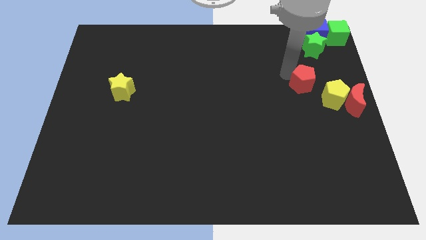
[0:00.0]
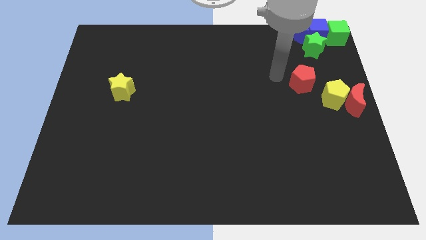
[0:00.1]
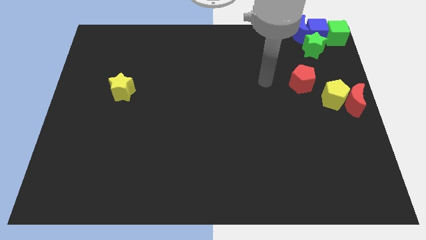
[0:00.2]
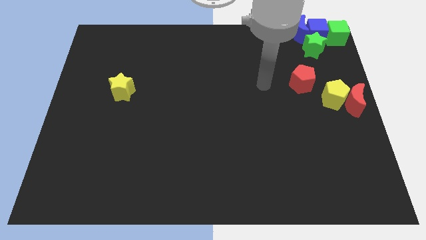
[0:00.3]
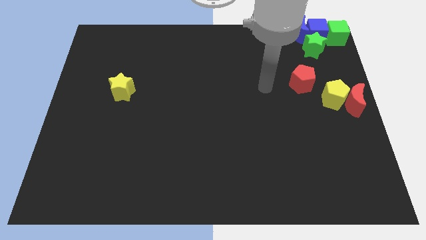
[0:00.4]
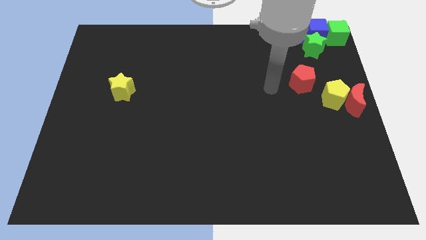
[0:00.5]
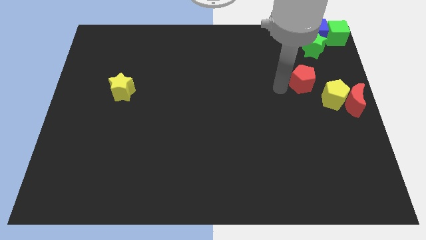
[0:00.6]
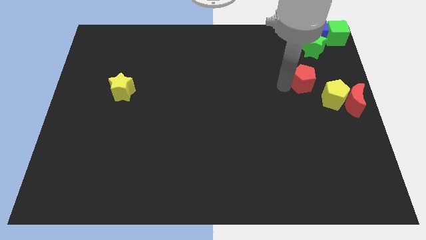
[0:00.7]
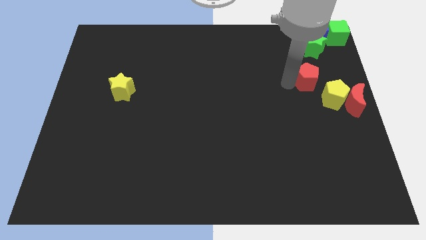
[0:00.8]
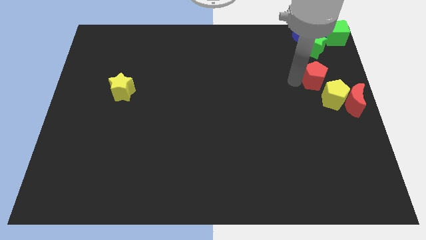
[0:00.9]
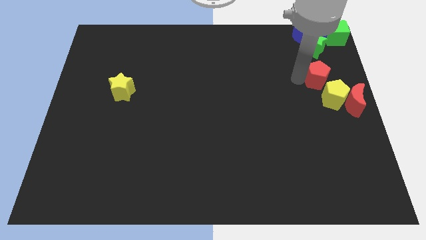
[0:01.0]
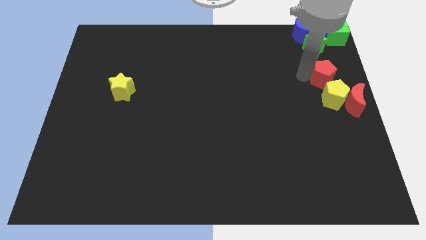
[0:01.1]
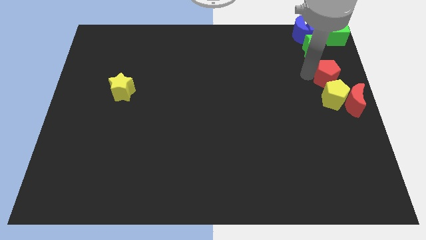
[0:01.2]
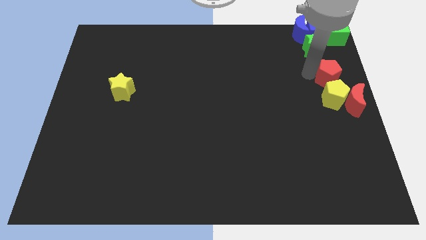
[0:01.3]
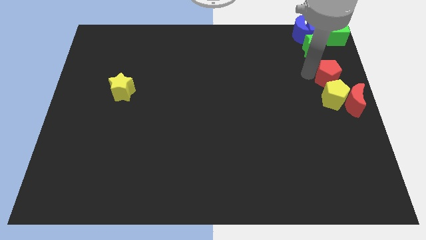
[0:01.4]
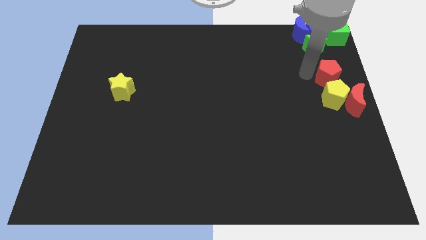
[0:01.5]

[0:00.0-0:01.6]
place the red pentagon at the top of the yellow pentagon

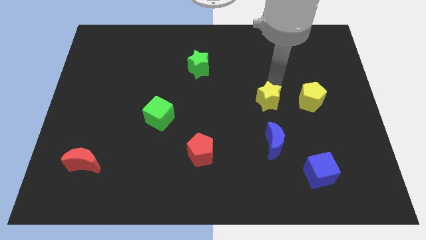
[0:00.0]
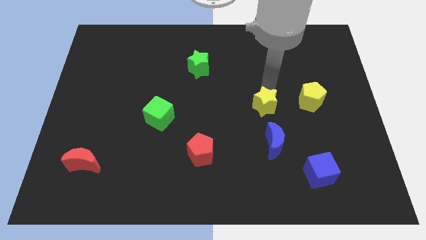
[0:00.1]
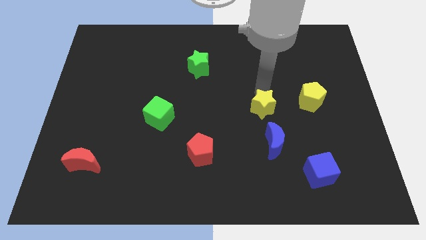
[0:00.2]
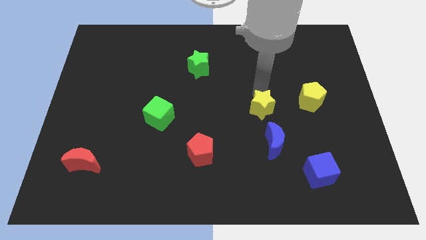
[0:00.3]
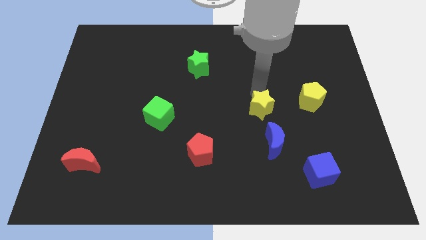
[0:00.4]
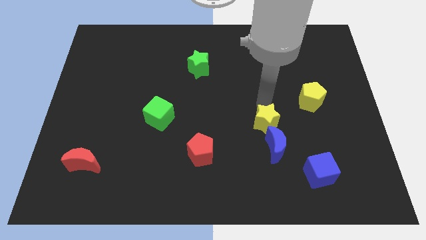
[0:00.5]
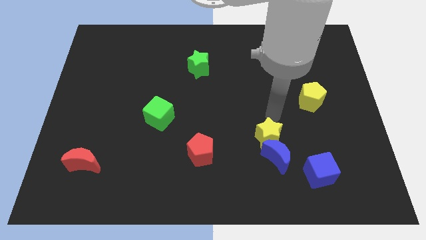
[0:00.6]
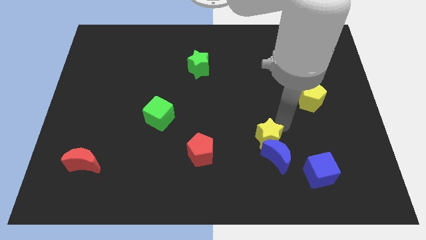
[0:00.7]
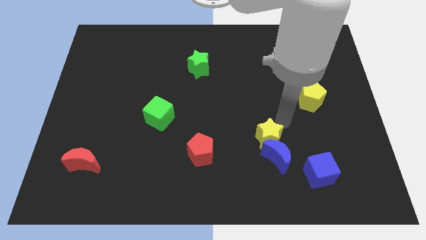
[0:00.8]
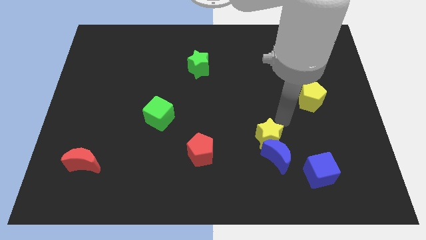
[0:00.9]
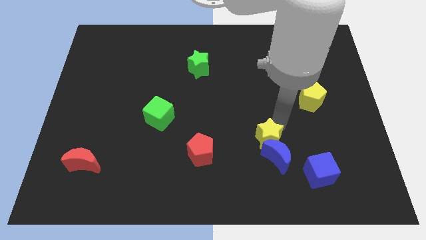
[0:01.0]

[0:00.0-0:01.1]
move yellow star above the blue moon

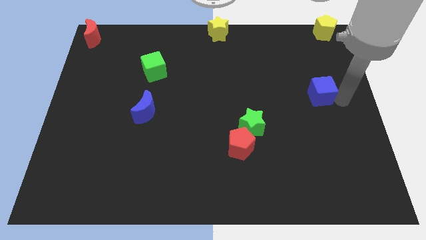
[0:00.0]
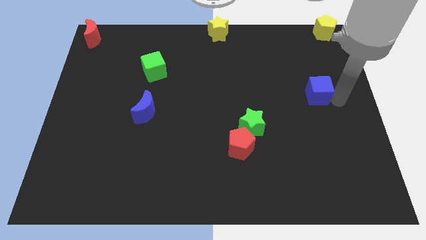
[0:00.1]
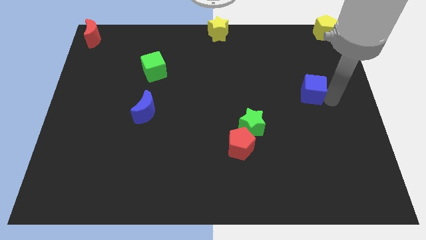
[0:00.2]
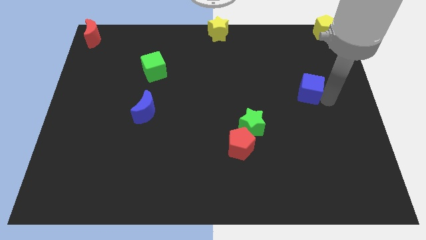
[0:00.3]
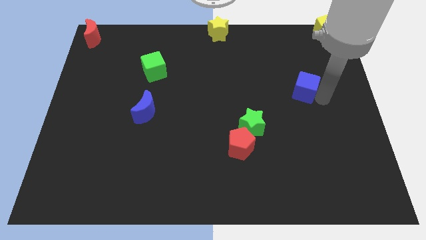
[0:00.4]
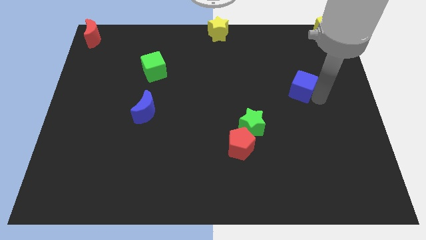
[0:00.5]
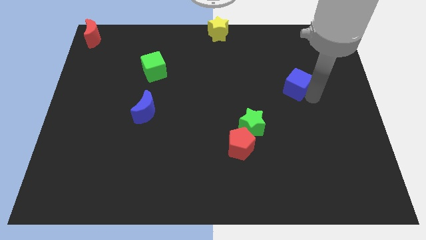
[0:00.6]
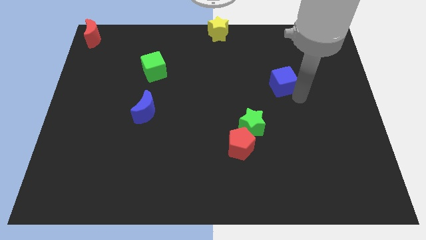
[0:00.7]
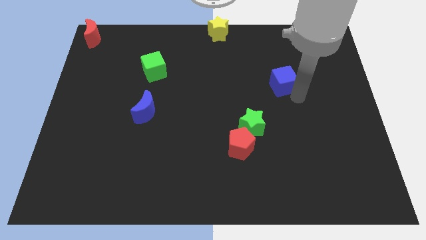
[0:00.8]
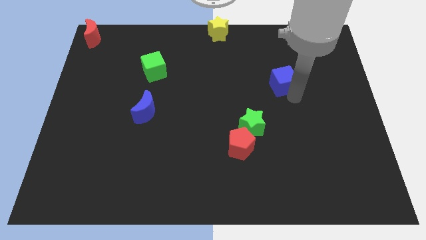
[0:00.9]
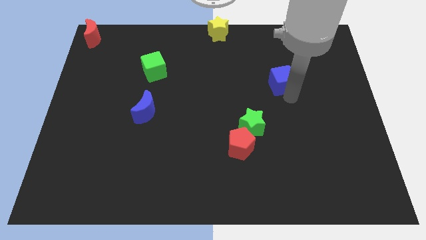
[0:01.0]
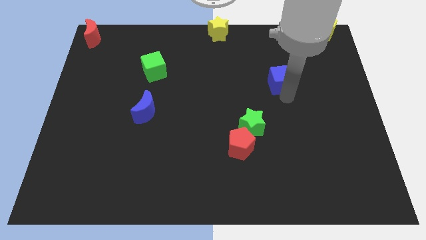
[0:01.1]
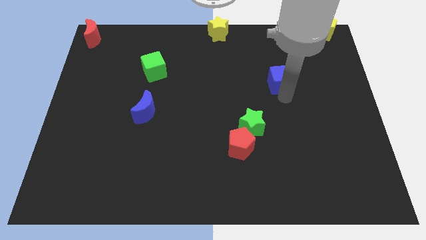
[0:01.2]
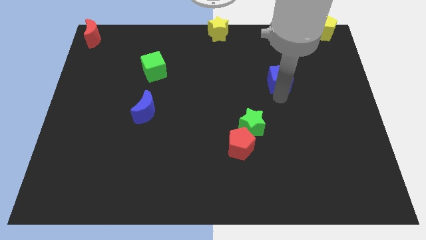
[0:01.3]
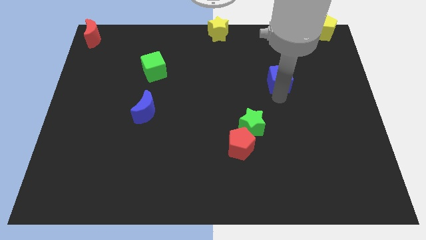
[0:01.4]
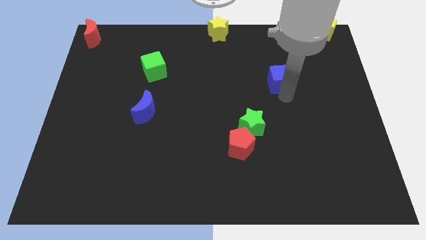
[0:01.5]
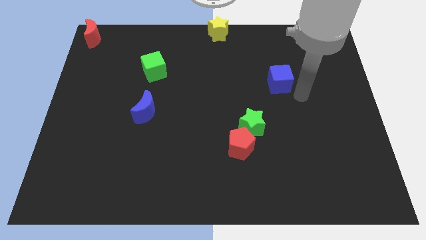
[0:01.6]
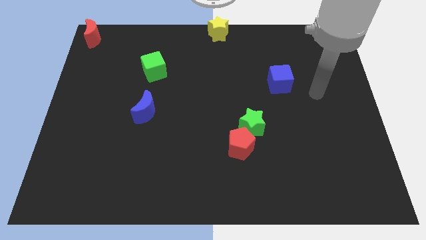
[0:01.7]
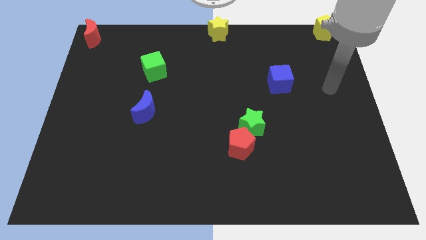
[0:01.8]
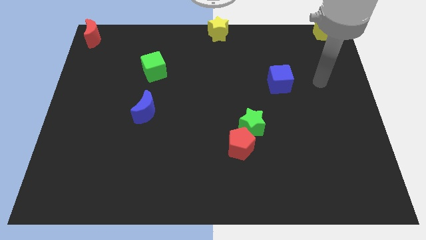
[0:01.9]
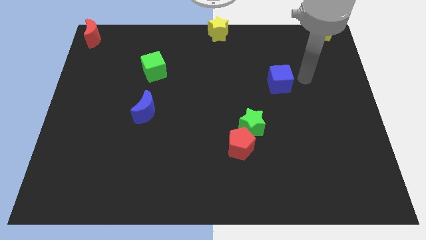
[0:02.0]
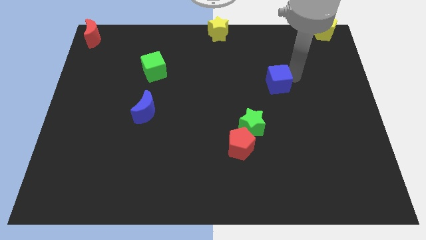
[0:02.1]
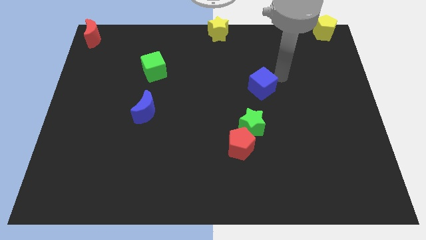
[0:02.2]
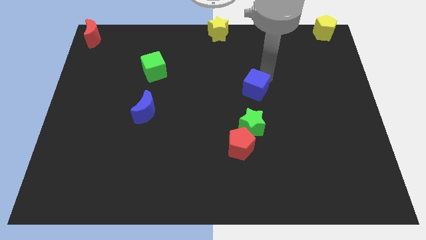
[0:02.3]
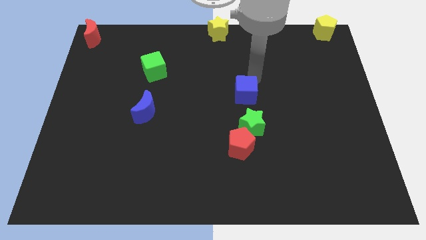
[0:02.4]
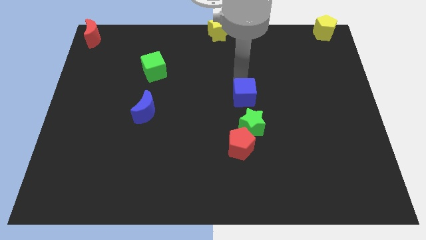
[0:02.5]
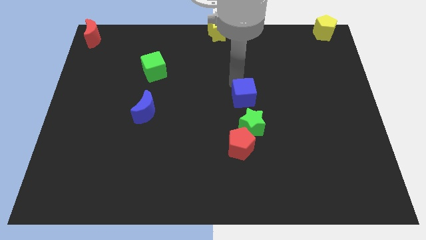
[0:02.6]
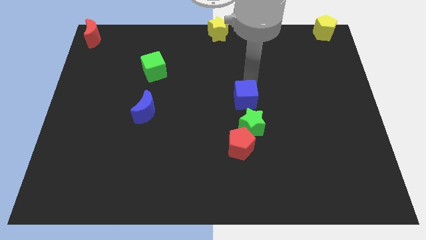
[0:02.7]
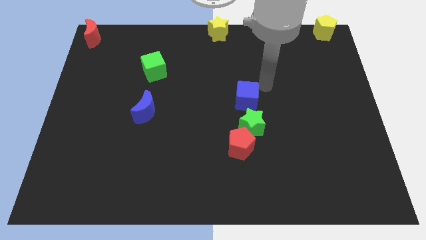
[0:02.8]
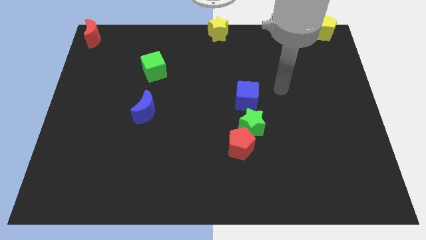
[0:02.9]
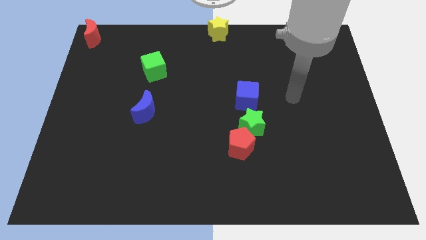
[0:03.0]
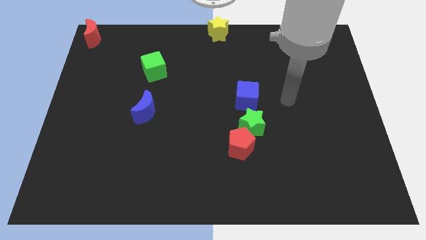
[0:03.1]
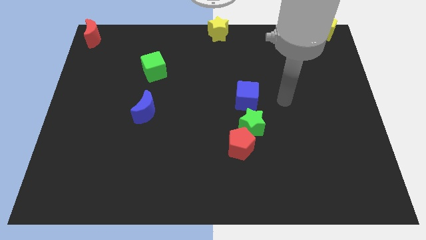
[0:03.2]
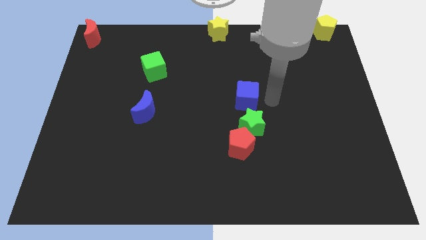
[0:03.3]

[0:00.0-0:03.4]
place blue cube to the top of green star

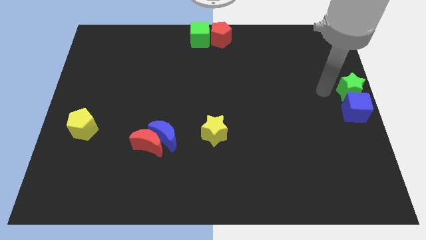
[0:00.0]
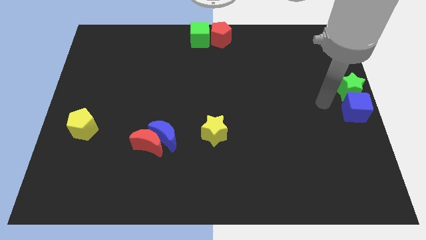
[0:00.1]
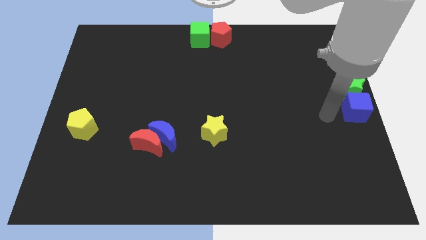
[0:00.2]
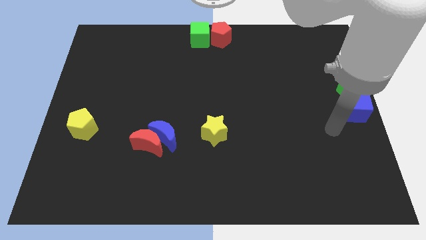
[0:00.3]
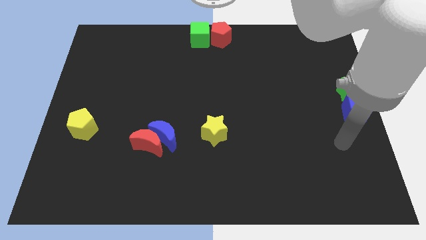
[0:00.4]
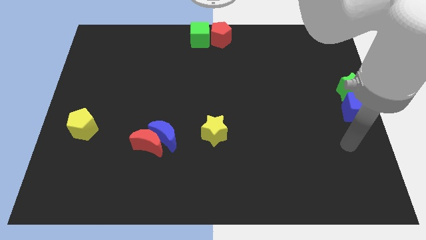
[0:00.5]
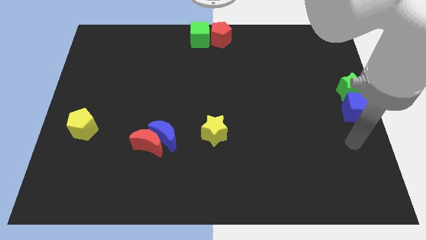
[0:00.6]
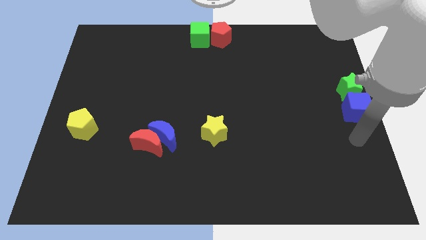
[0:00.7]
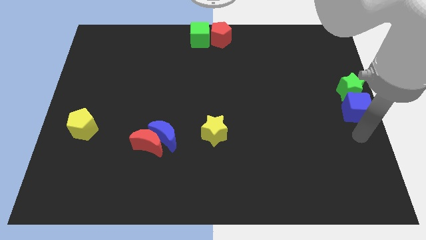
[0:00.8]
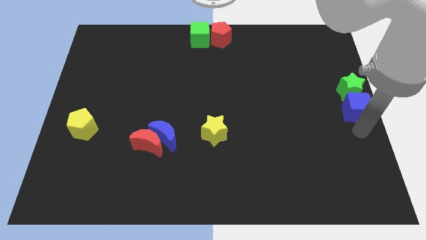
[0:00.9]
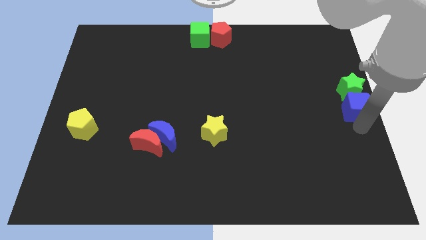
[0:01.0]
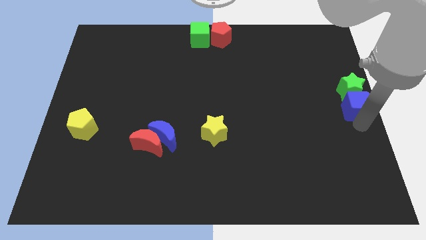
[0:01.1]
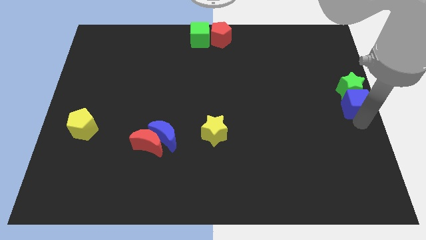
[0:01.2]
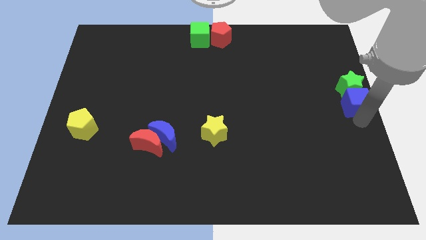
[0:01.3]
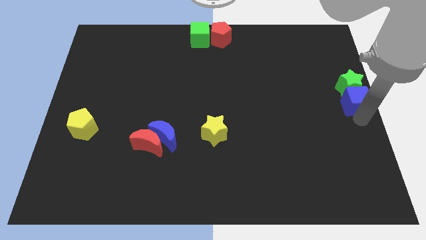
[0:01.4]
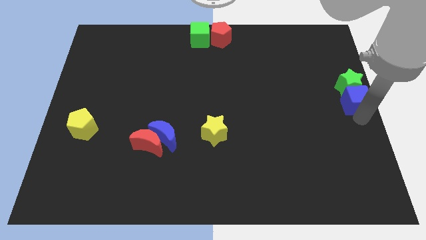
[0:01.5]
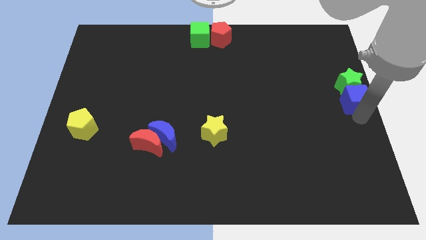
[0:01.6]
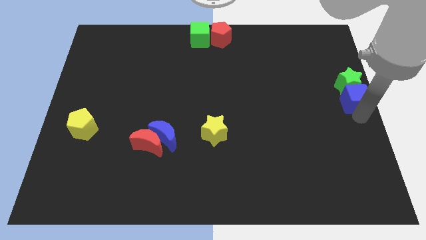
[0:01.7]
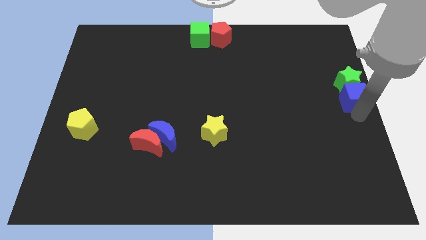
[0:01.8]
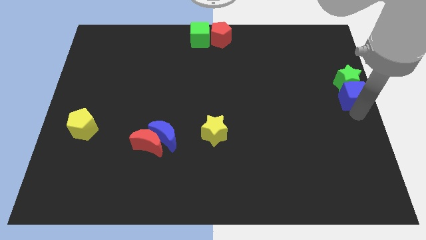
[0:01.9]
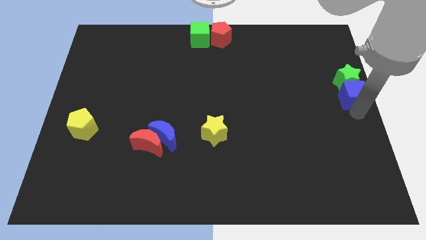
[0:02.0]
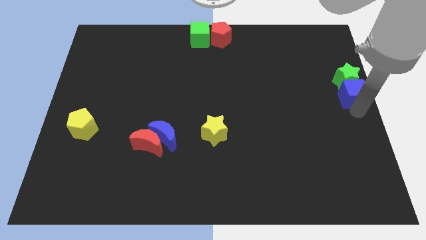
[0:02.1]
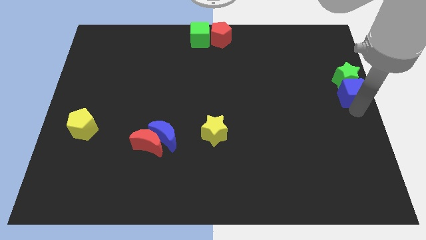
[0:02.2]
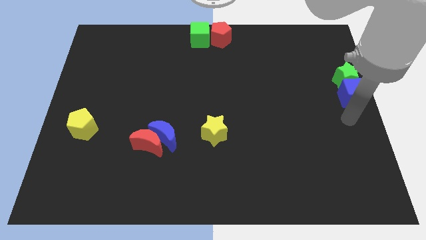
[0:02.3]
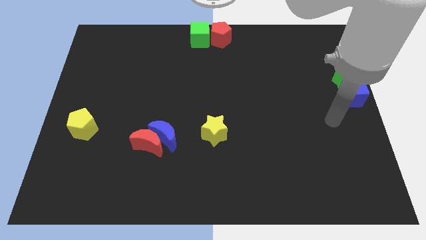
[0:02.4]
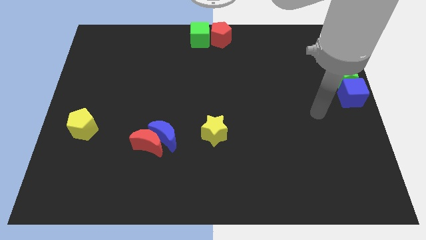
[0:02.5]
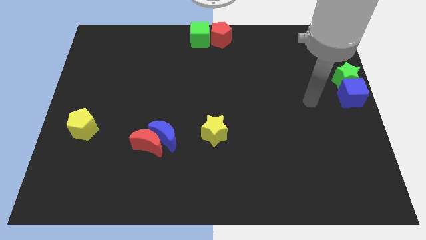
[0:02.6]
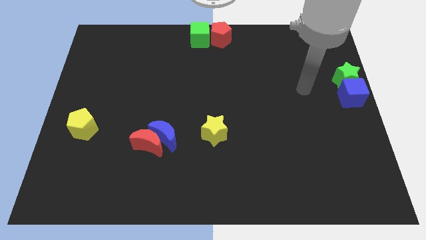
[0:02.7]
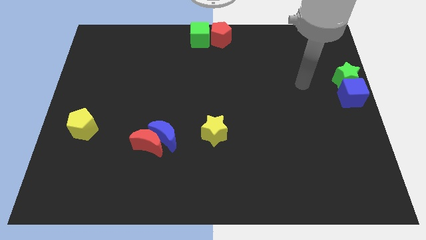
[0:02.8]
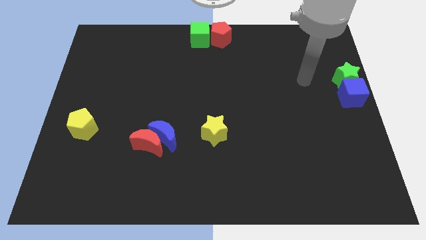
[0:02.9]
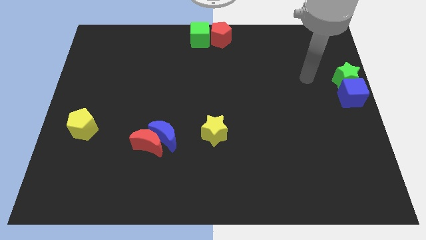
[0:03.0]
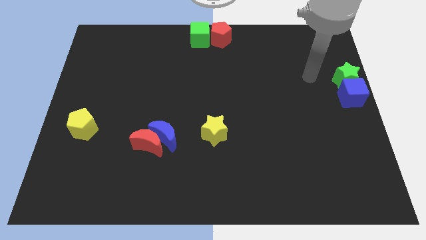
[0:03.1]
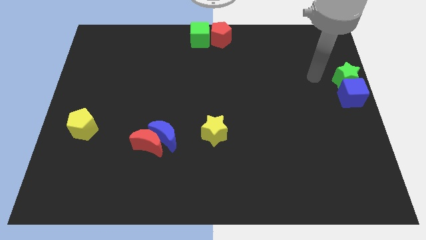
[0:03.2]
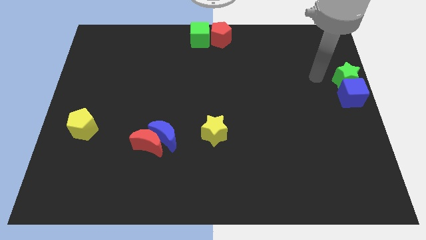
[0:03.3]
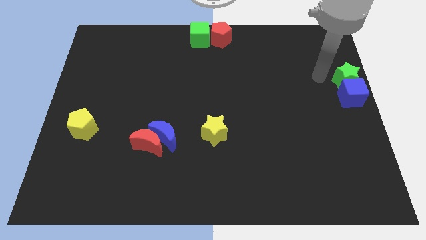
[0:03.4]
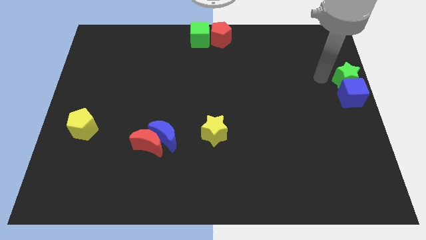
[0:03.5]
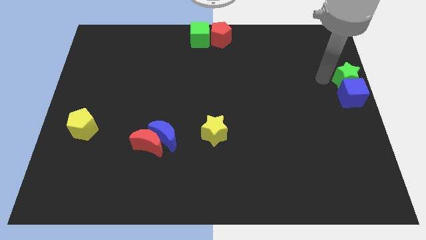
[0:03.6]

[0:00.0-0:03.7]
push the blue cube and the green star up slightly
